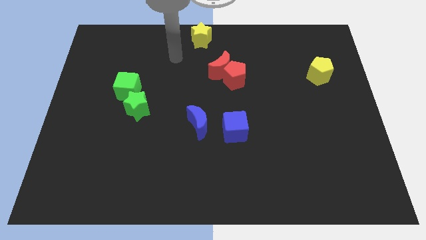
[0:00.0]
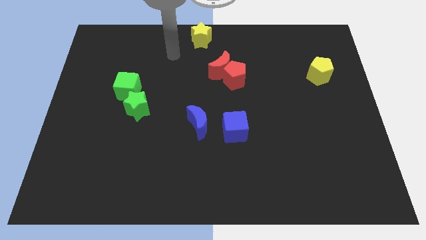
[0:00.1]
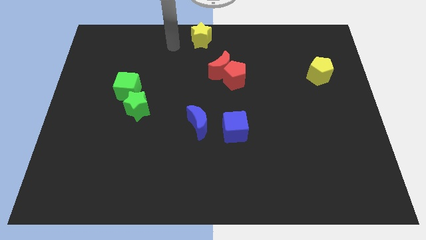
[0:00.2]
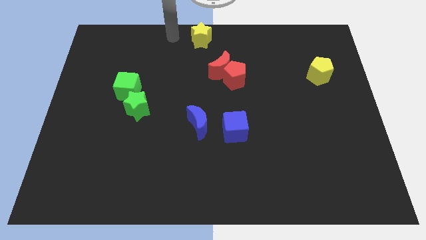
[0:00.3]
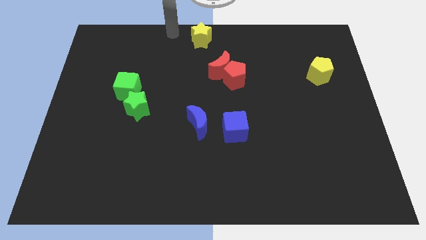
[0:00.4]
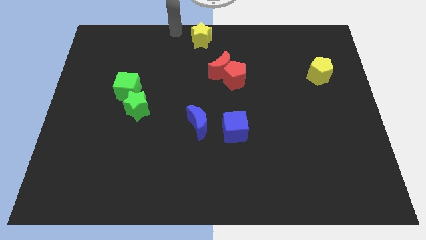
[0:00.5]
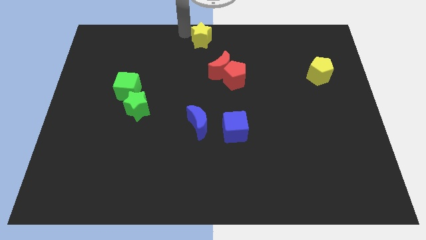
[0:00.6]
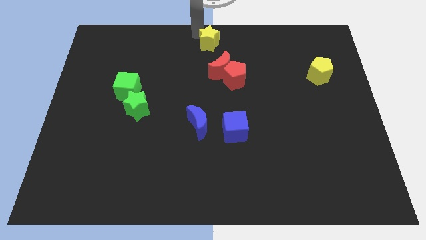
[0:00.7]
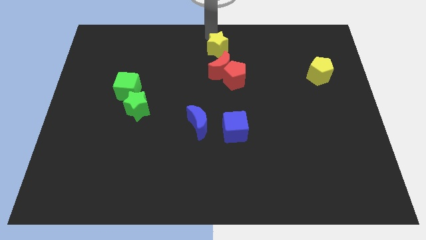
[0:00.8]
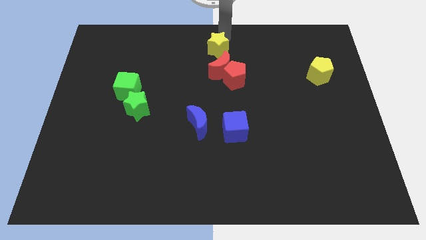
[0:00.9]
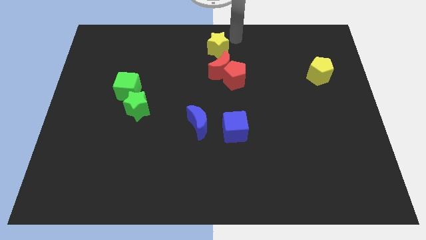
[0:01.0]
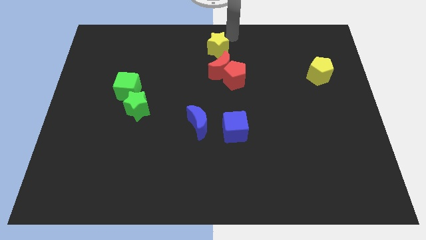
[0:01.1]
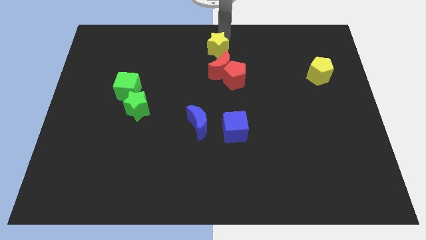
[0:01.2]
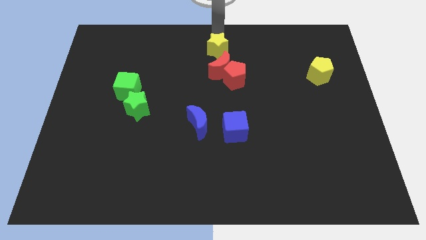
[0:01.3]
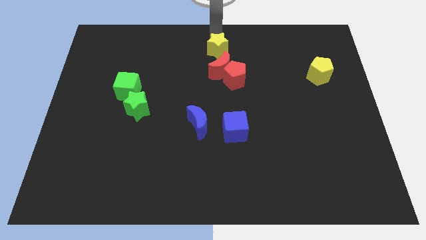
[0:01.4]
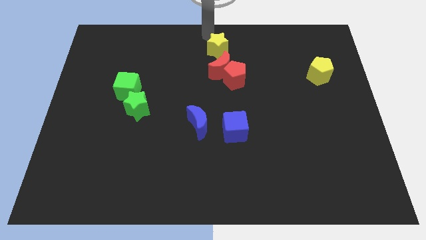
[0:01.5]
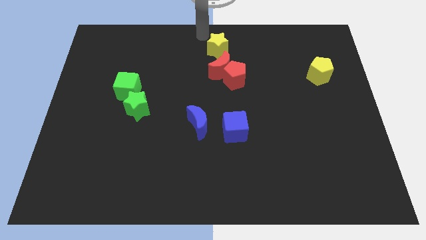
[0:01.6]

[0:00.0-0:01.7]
slightly push the yellow star on the top of the red crescent

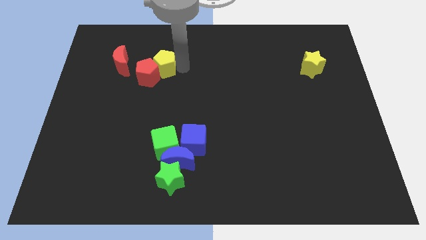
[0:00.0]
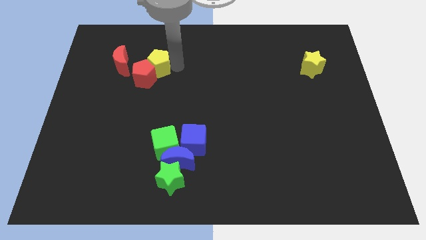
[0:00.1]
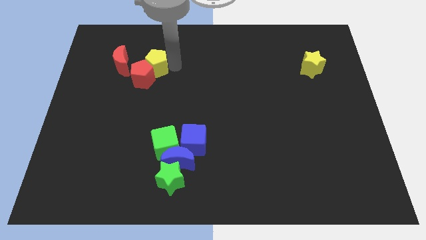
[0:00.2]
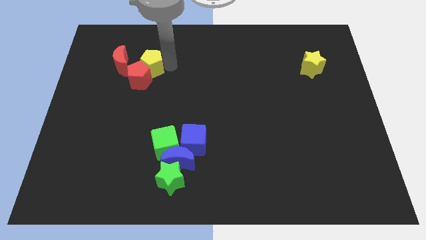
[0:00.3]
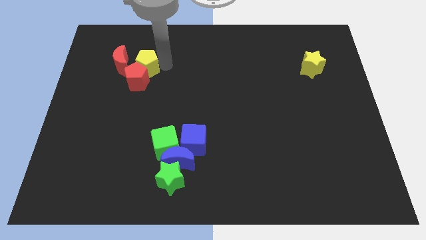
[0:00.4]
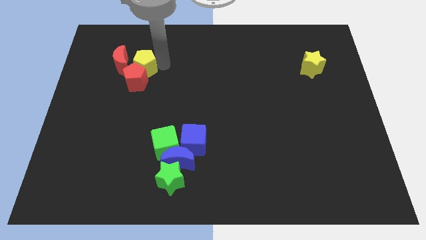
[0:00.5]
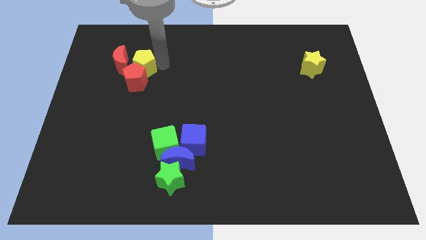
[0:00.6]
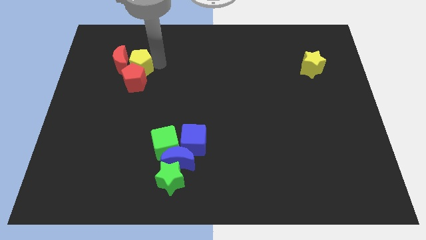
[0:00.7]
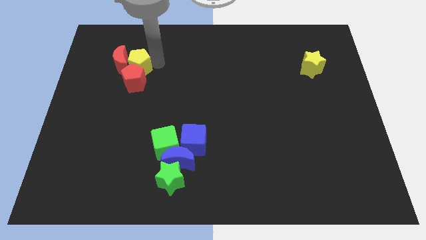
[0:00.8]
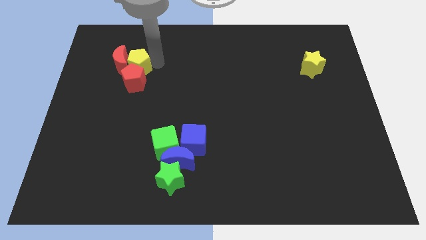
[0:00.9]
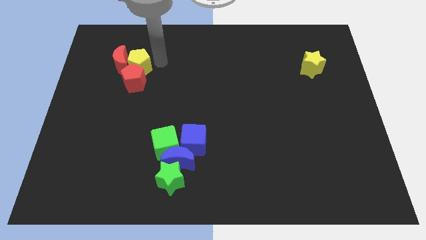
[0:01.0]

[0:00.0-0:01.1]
move pentagons slightly left

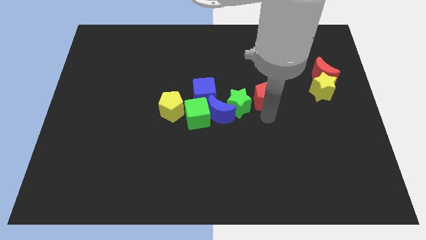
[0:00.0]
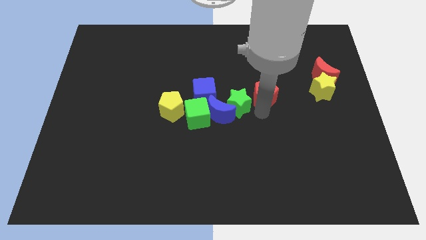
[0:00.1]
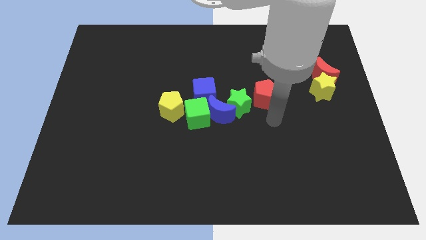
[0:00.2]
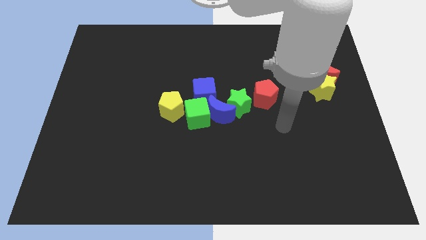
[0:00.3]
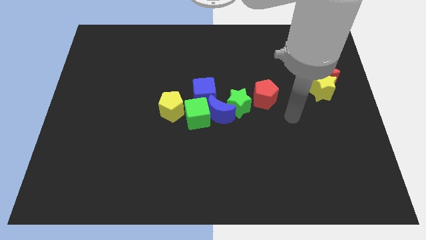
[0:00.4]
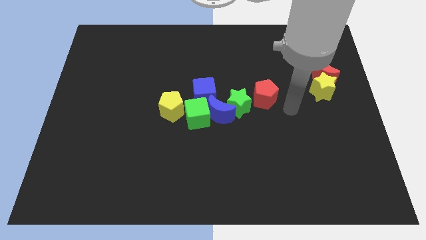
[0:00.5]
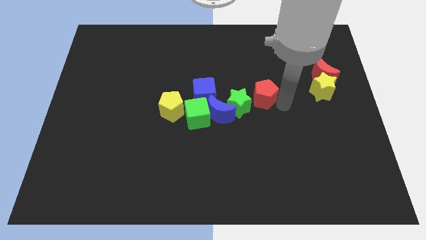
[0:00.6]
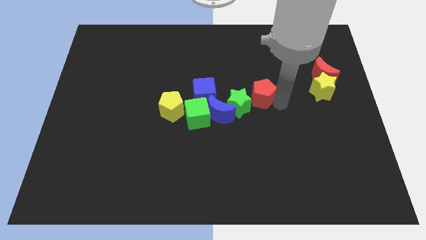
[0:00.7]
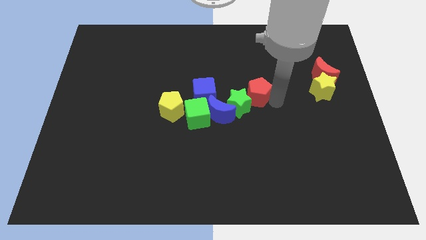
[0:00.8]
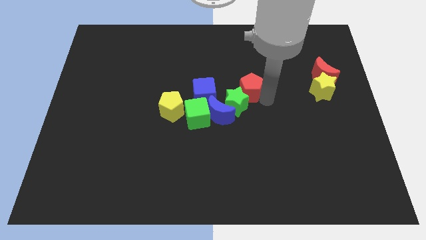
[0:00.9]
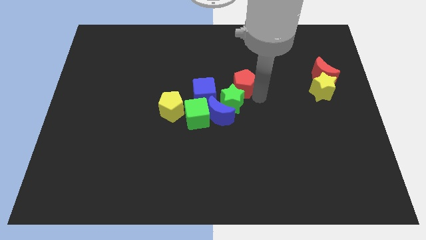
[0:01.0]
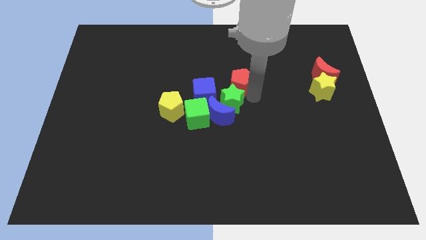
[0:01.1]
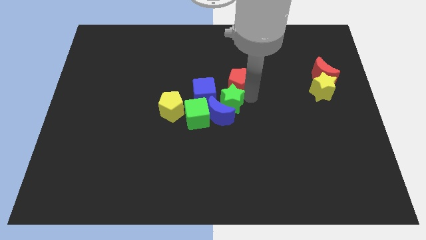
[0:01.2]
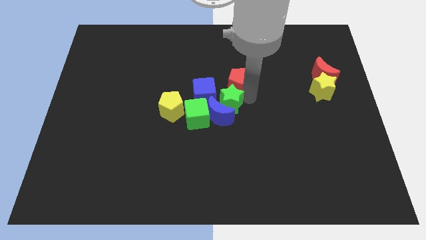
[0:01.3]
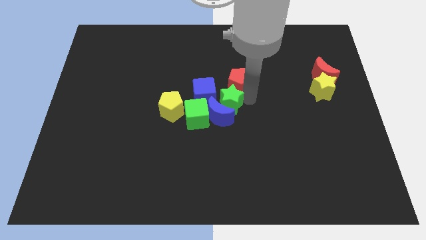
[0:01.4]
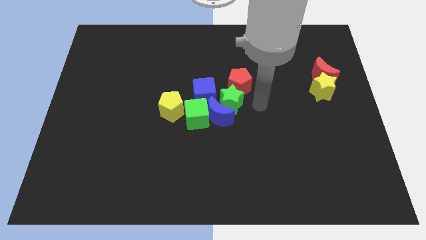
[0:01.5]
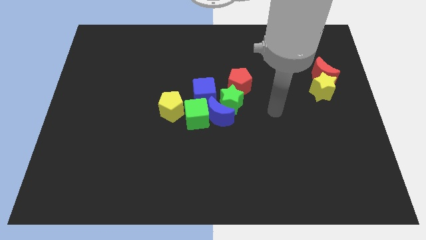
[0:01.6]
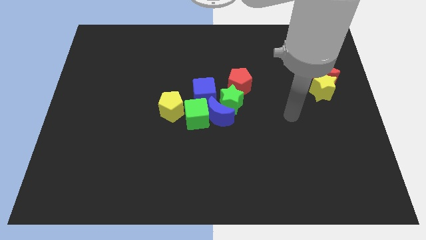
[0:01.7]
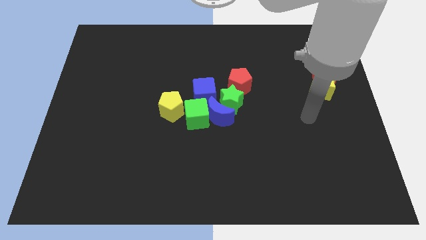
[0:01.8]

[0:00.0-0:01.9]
push the red pentagon into green star

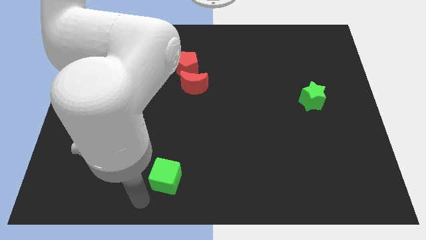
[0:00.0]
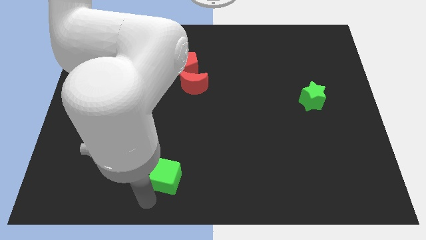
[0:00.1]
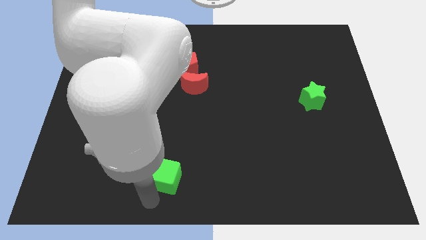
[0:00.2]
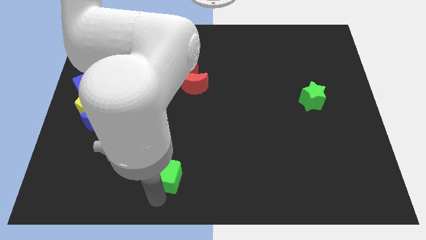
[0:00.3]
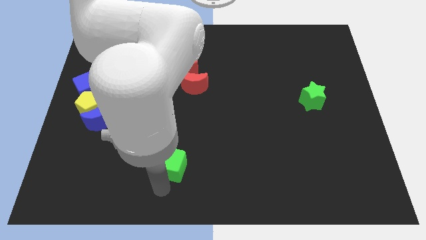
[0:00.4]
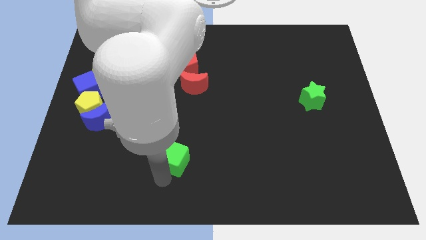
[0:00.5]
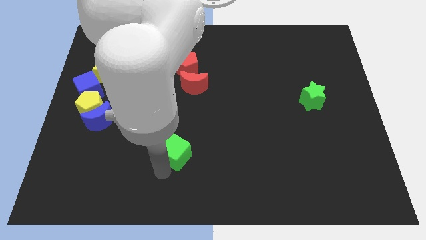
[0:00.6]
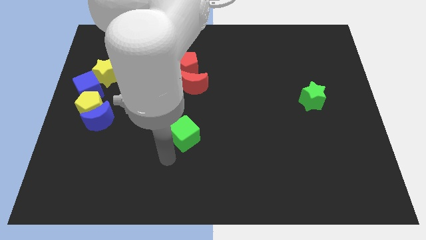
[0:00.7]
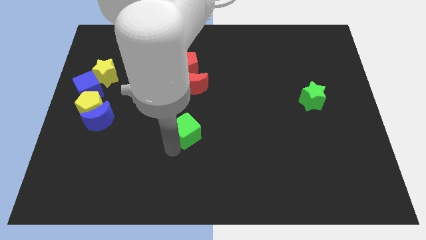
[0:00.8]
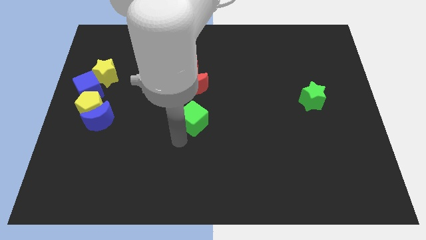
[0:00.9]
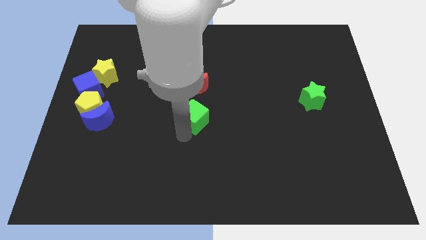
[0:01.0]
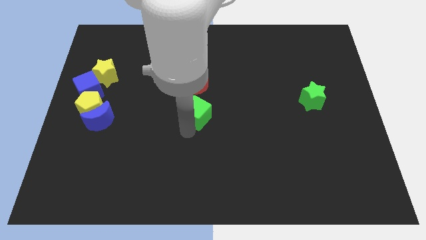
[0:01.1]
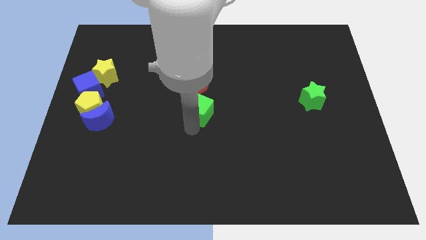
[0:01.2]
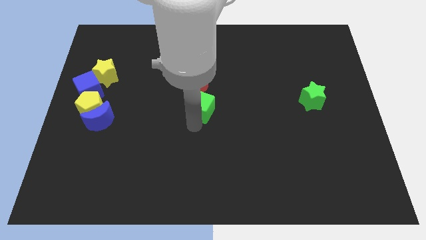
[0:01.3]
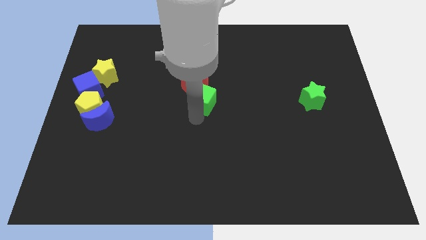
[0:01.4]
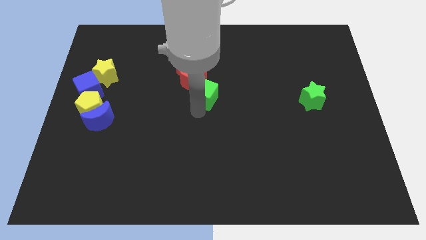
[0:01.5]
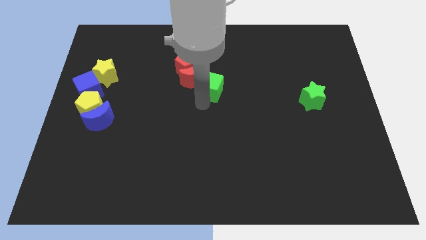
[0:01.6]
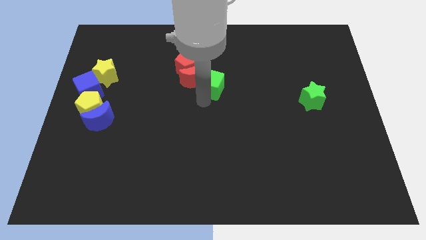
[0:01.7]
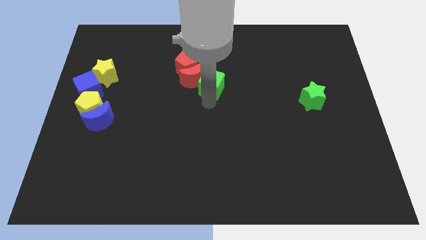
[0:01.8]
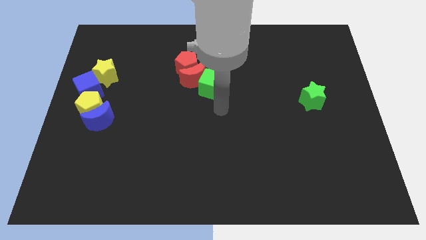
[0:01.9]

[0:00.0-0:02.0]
move the green cube below the red moon

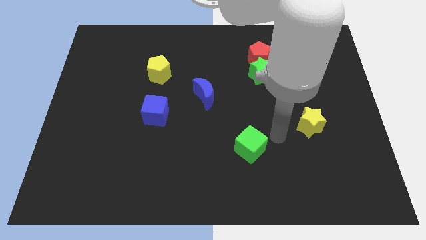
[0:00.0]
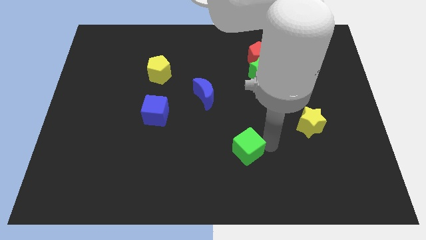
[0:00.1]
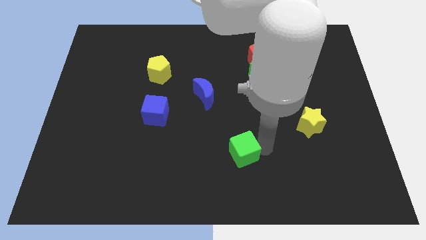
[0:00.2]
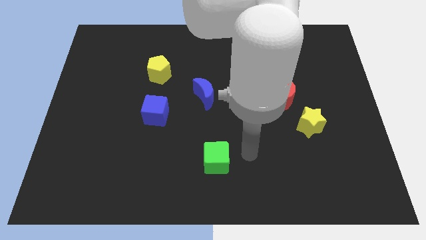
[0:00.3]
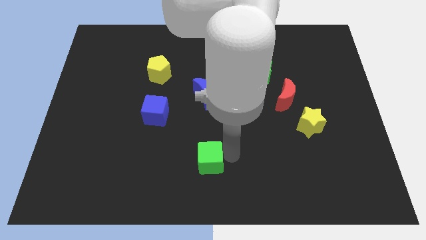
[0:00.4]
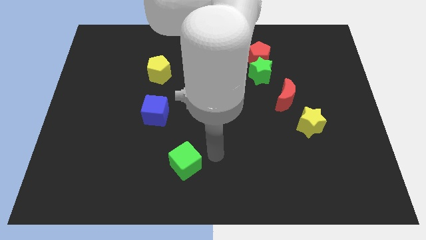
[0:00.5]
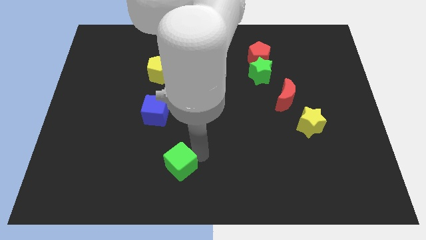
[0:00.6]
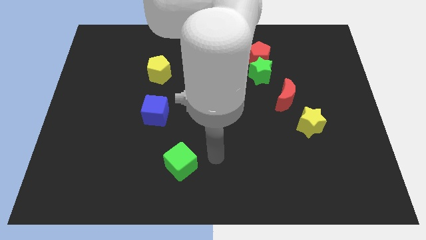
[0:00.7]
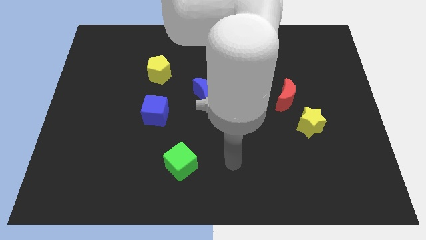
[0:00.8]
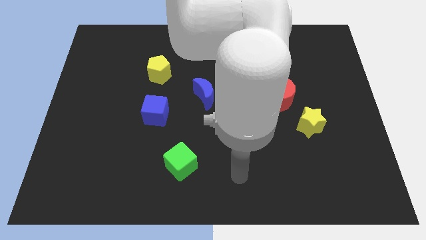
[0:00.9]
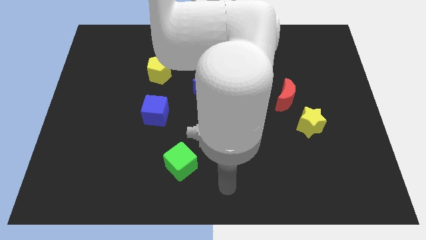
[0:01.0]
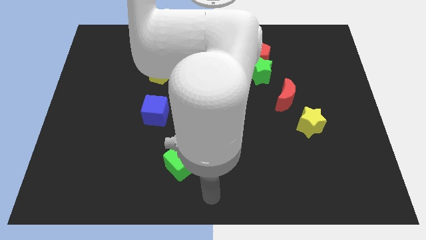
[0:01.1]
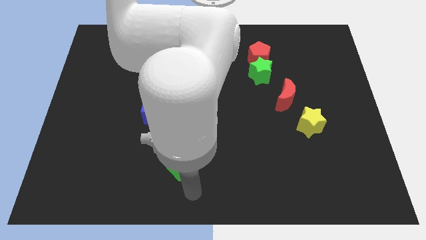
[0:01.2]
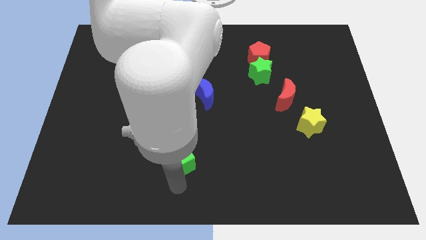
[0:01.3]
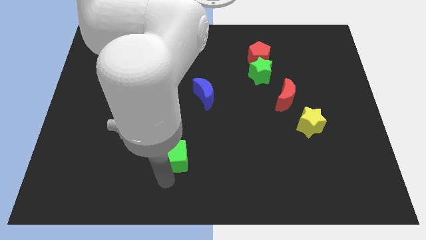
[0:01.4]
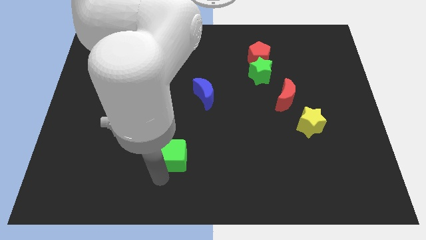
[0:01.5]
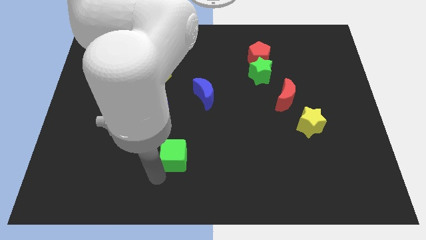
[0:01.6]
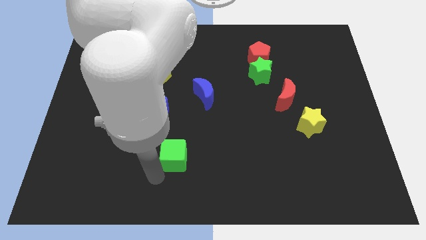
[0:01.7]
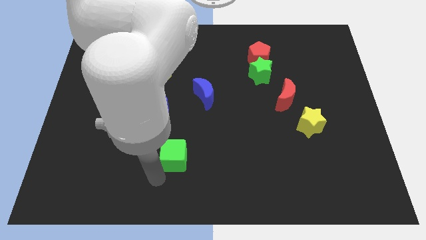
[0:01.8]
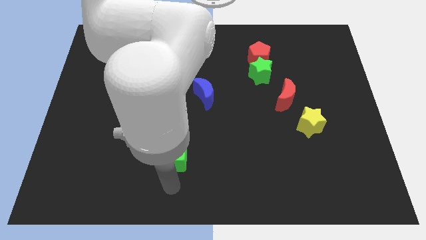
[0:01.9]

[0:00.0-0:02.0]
push the green cube to the bottom of the blue cube

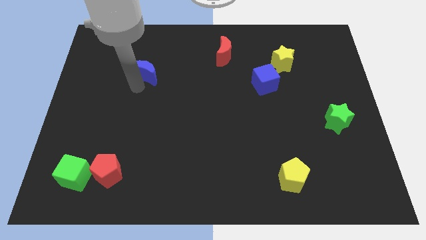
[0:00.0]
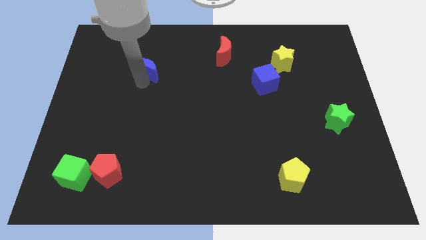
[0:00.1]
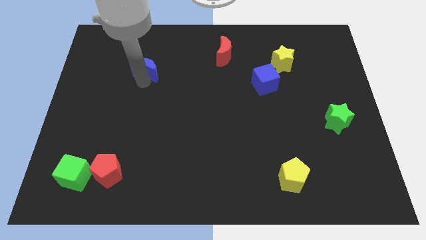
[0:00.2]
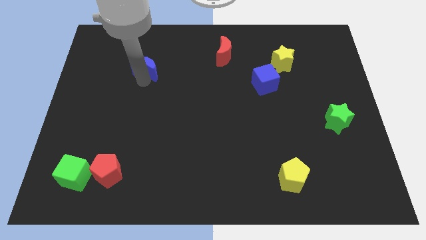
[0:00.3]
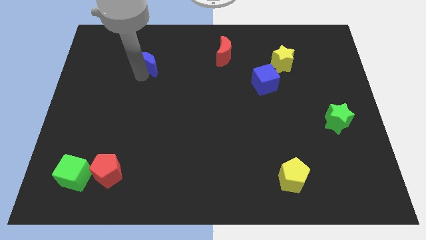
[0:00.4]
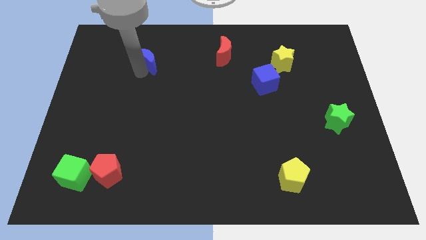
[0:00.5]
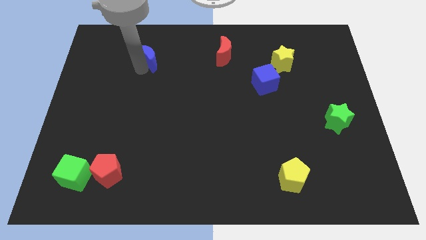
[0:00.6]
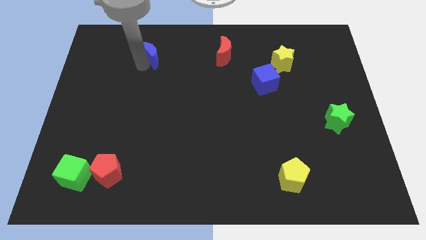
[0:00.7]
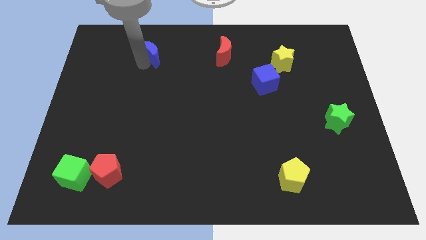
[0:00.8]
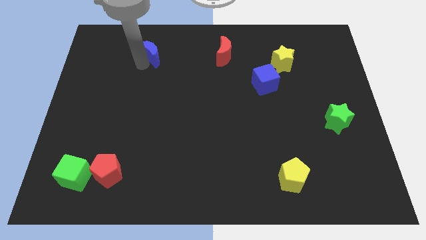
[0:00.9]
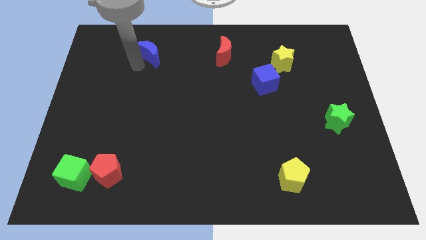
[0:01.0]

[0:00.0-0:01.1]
place the blue moon left to the red moon
